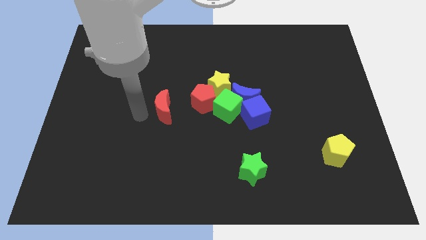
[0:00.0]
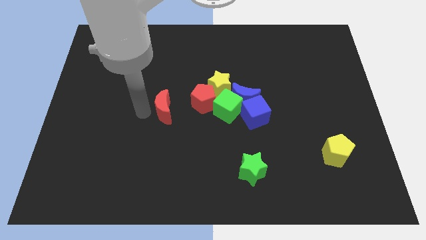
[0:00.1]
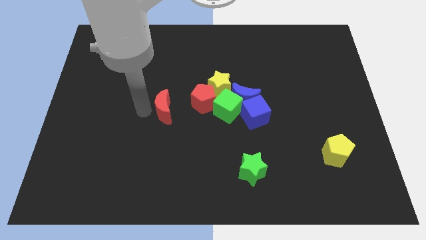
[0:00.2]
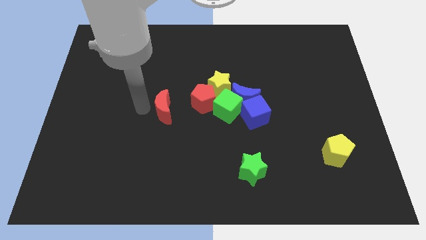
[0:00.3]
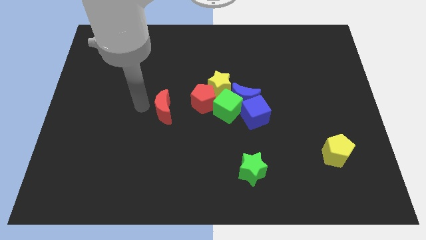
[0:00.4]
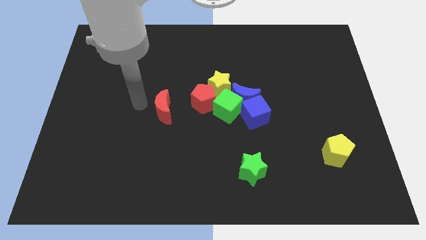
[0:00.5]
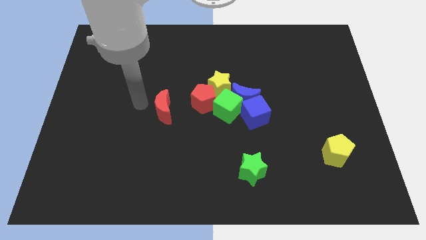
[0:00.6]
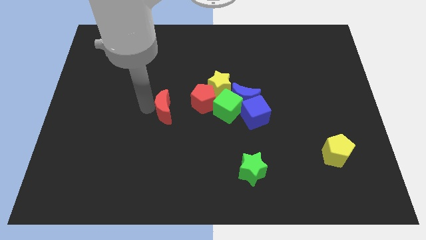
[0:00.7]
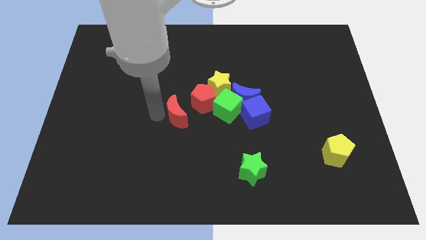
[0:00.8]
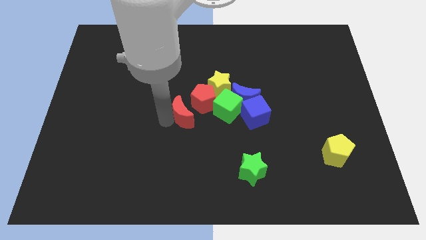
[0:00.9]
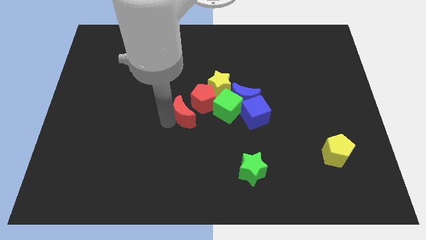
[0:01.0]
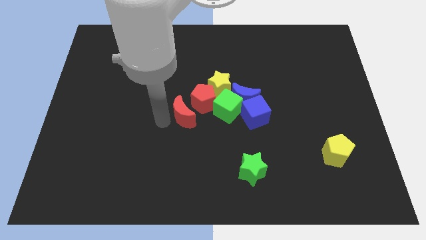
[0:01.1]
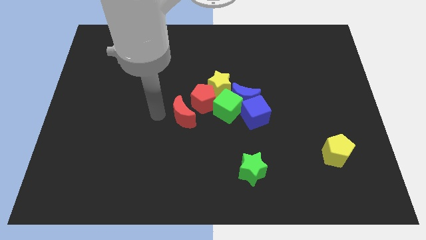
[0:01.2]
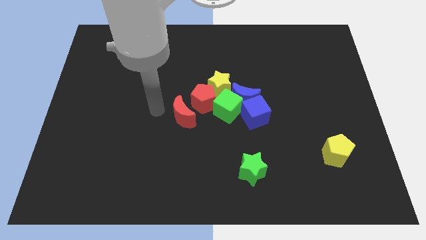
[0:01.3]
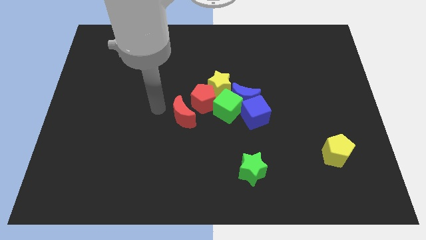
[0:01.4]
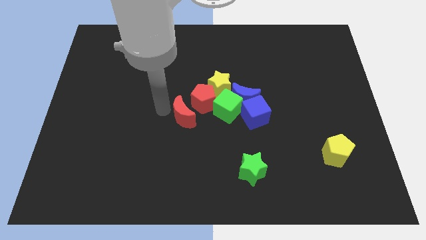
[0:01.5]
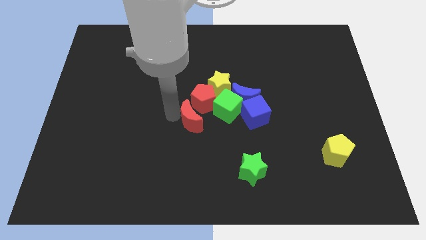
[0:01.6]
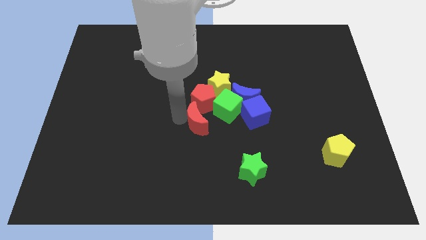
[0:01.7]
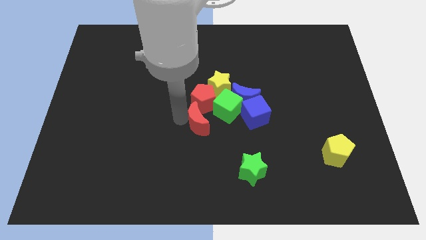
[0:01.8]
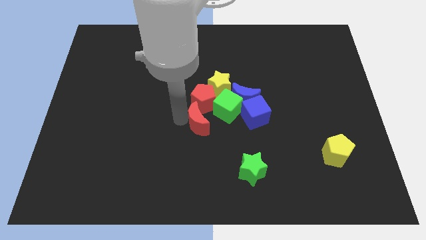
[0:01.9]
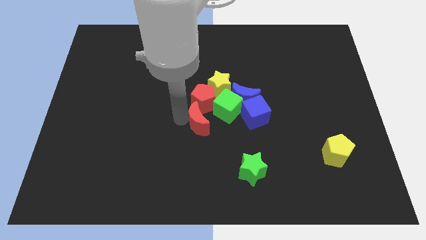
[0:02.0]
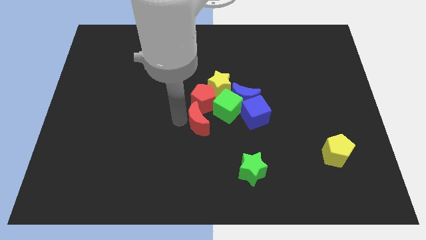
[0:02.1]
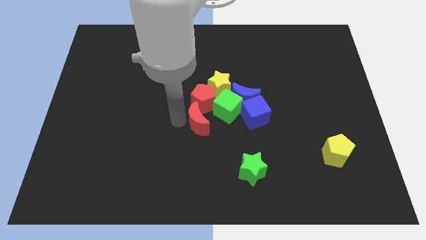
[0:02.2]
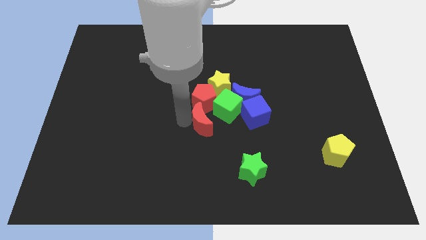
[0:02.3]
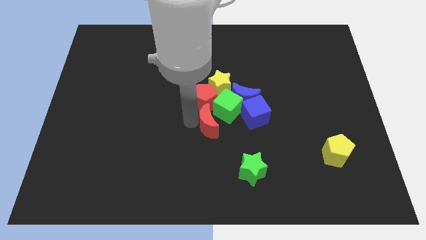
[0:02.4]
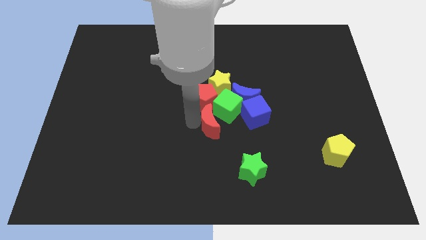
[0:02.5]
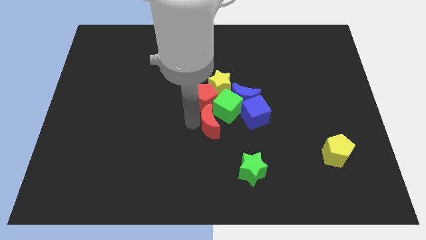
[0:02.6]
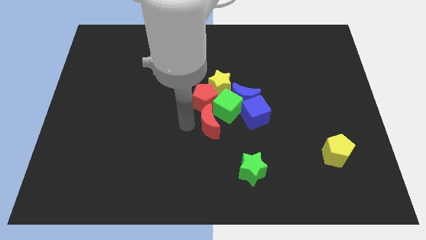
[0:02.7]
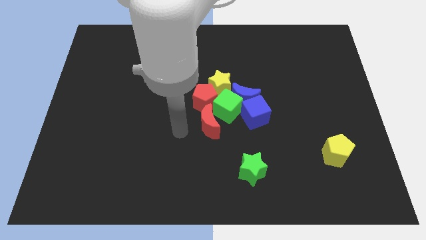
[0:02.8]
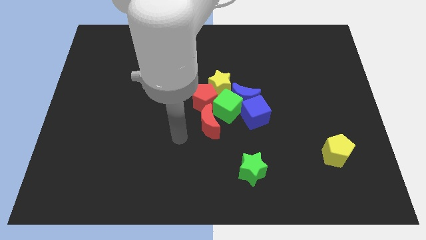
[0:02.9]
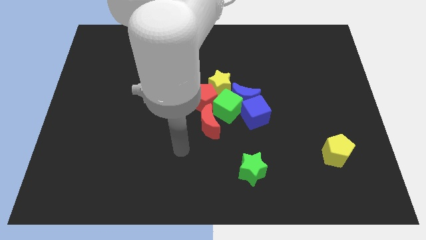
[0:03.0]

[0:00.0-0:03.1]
move the red crescent below to the green cube

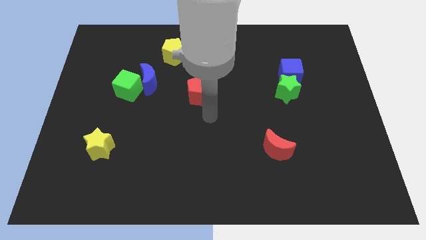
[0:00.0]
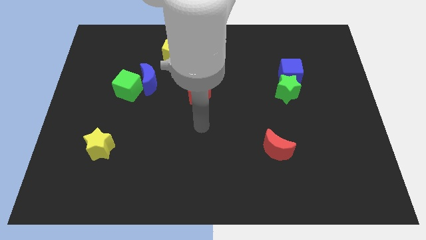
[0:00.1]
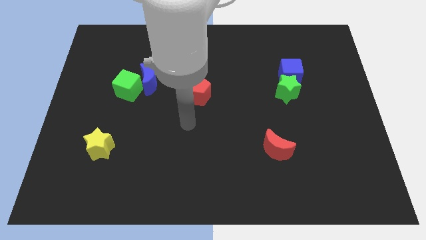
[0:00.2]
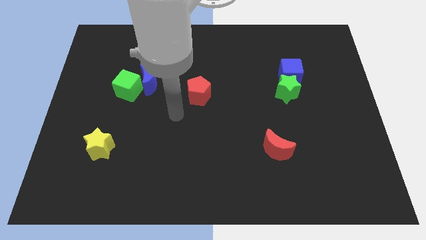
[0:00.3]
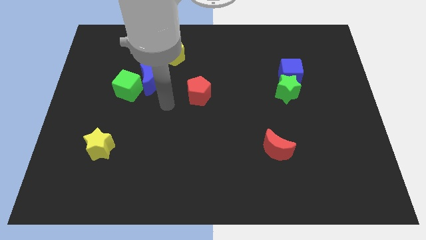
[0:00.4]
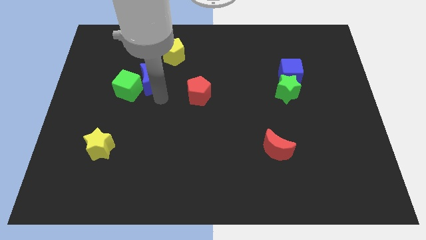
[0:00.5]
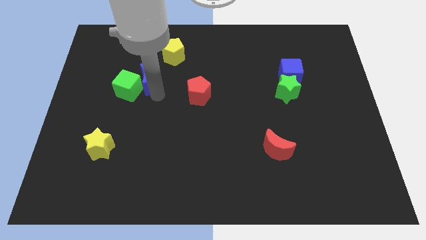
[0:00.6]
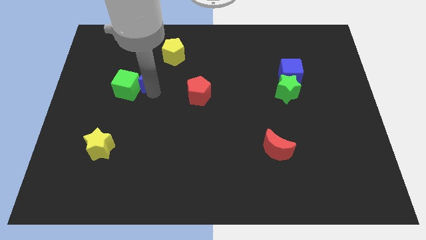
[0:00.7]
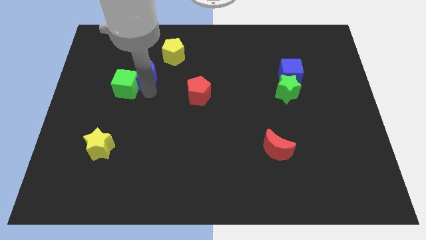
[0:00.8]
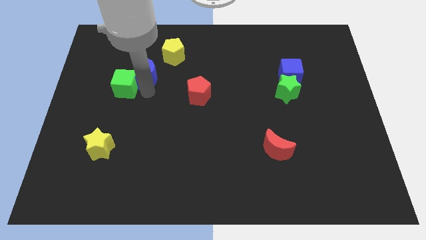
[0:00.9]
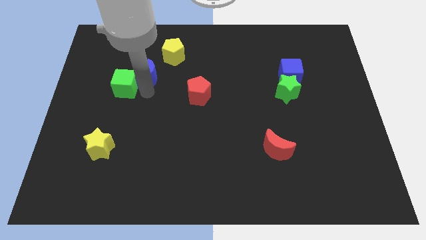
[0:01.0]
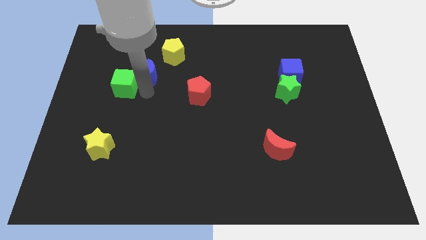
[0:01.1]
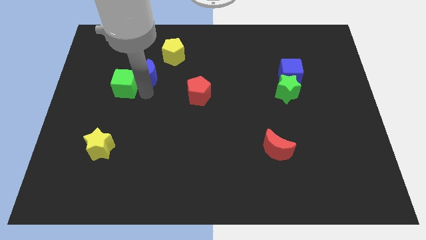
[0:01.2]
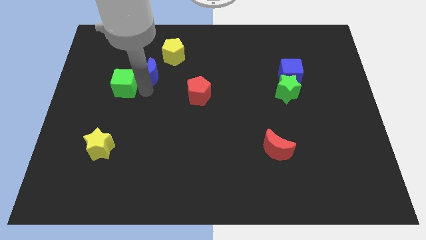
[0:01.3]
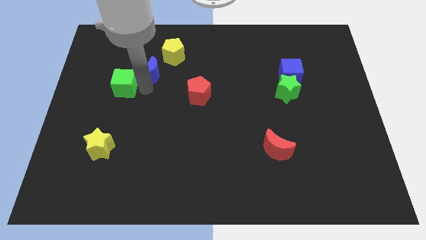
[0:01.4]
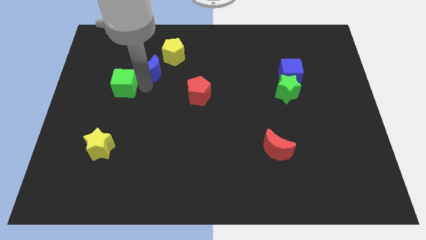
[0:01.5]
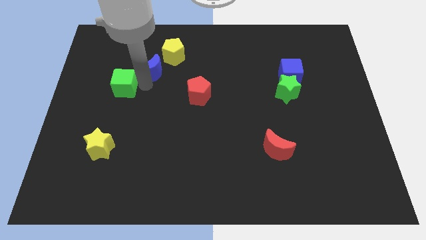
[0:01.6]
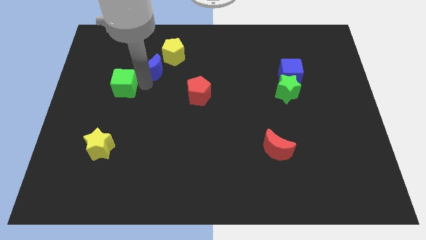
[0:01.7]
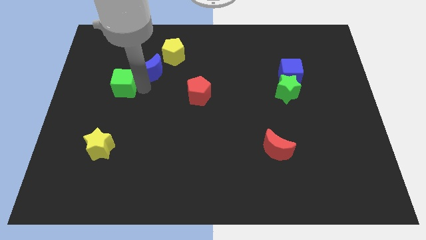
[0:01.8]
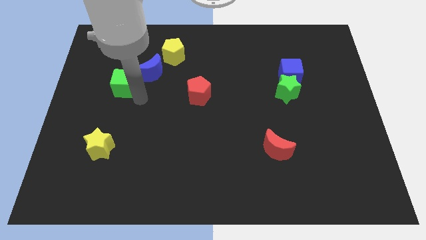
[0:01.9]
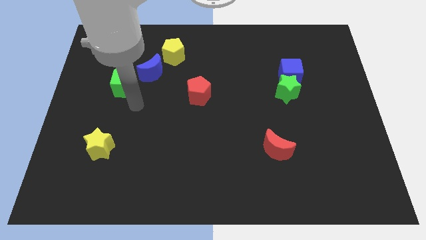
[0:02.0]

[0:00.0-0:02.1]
move the blue moon slightly up

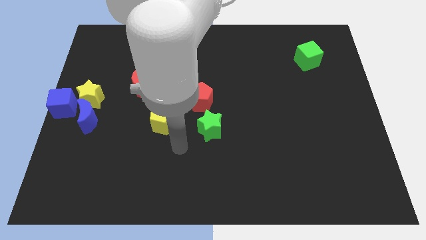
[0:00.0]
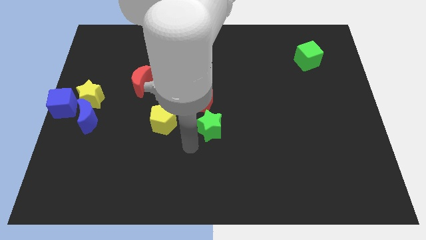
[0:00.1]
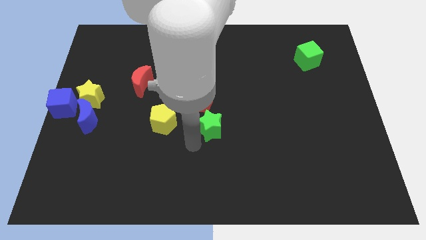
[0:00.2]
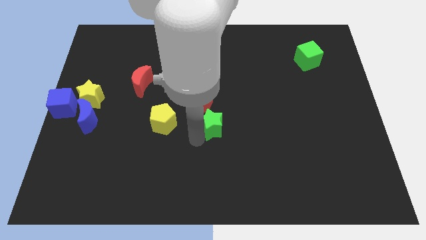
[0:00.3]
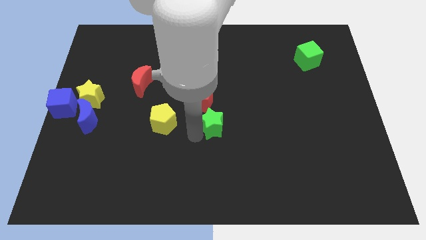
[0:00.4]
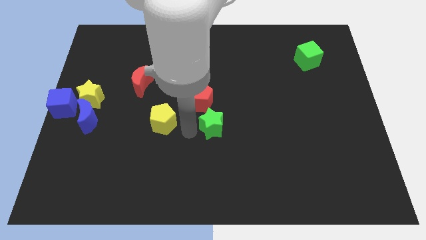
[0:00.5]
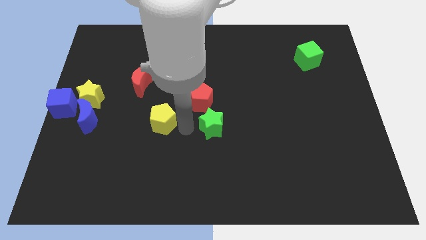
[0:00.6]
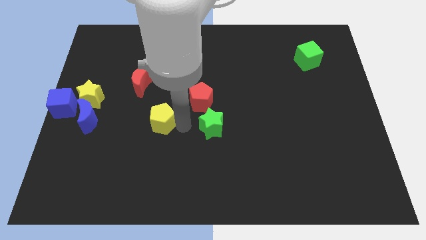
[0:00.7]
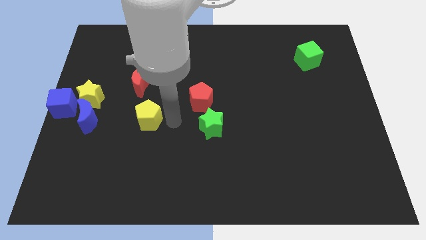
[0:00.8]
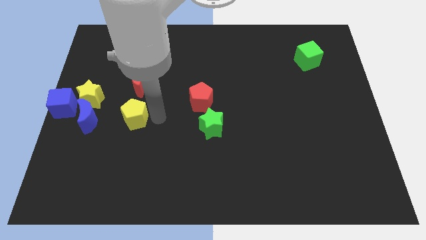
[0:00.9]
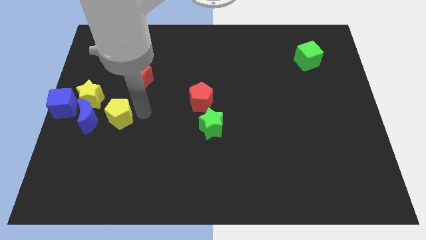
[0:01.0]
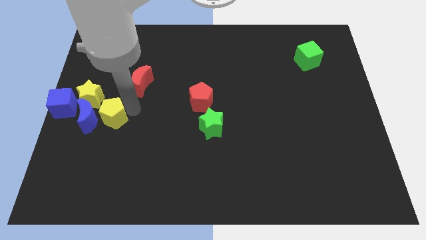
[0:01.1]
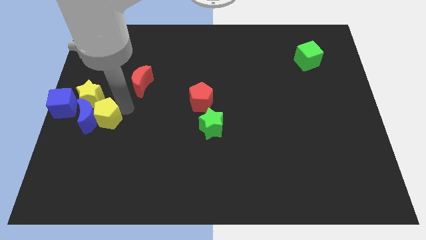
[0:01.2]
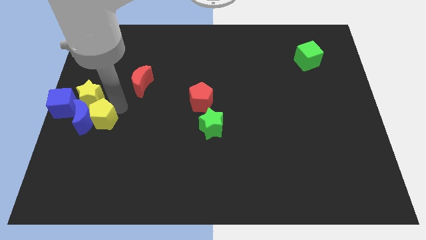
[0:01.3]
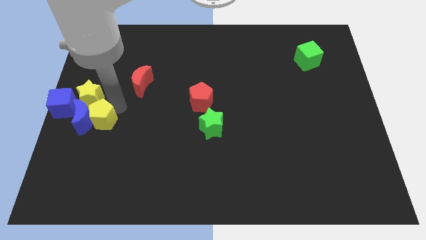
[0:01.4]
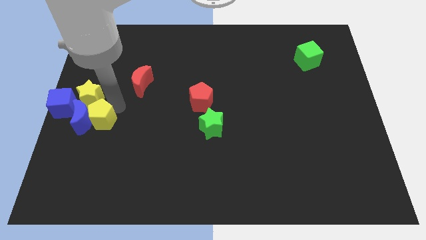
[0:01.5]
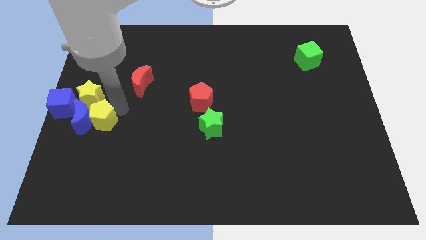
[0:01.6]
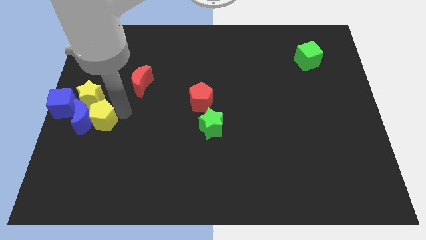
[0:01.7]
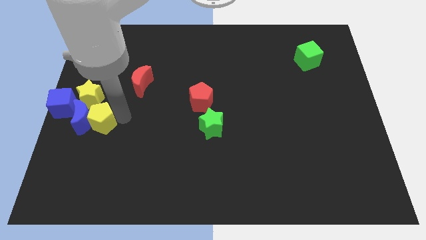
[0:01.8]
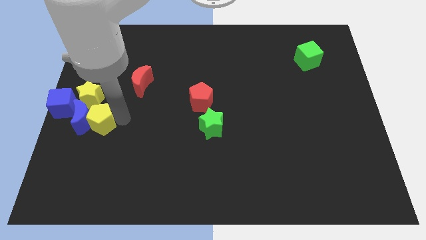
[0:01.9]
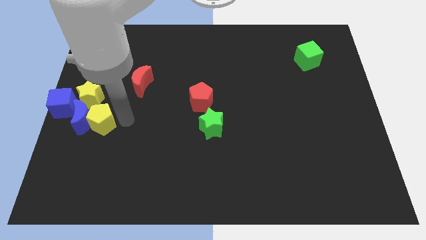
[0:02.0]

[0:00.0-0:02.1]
add yellow pentagon to the right of blue moon

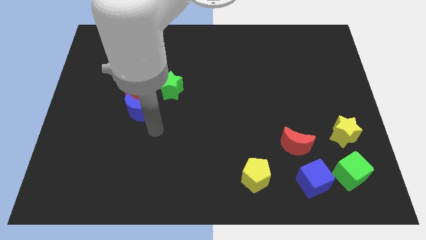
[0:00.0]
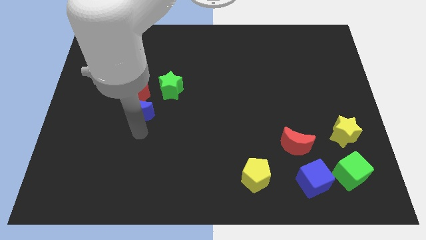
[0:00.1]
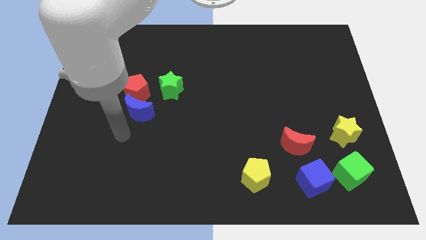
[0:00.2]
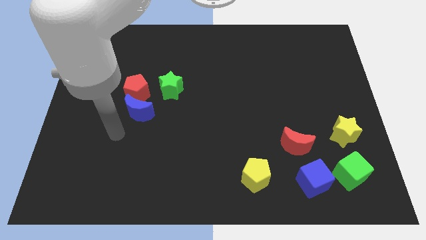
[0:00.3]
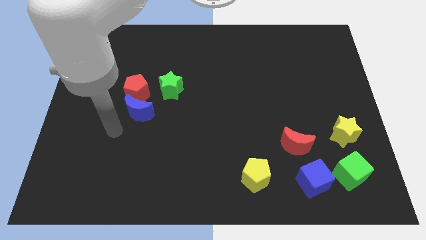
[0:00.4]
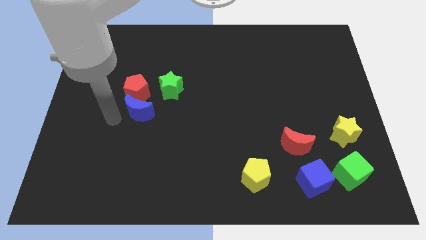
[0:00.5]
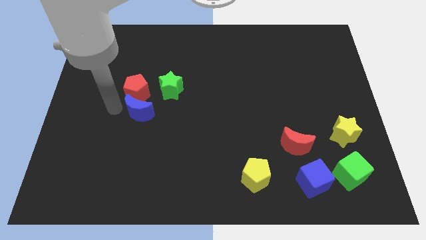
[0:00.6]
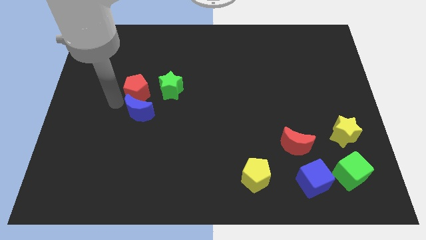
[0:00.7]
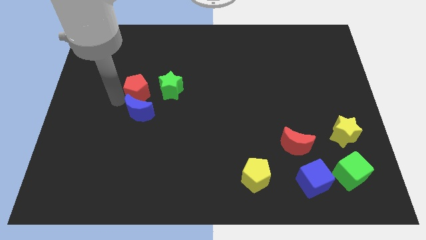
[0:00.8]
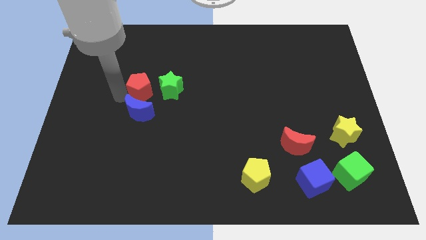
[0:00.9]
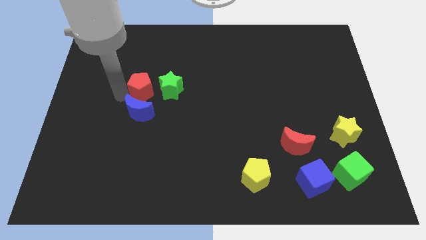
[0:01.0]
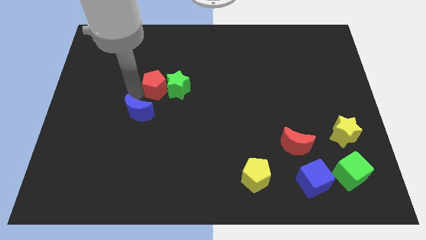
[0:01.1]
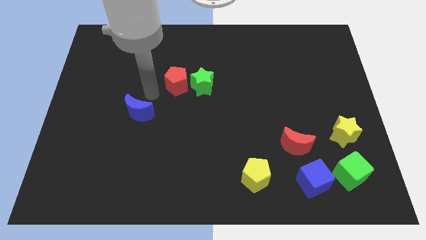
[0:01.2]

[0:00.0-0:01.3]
push the red pentagon into the green star

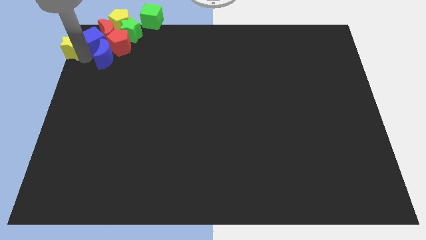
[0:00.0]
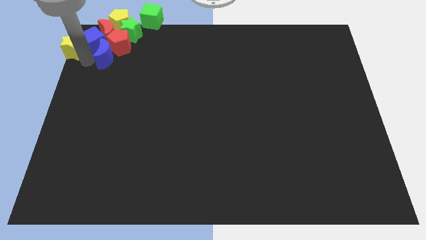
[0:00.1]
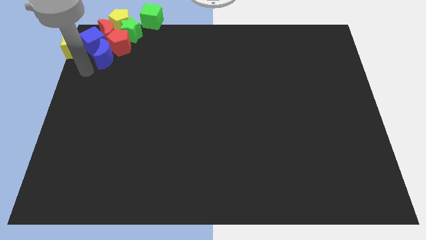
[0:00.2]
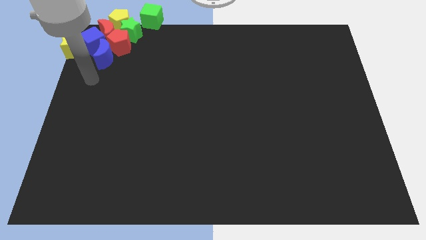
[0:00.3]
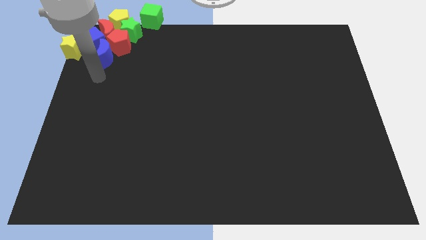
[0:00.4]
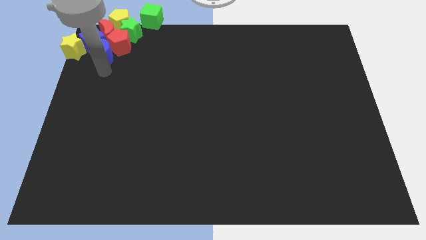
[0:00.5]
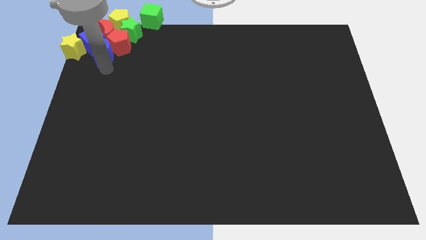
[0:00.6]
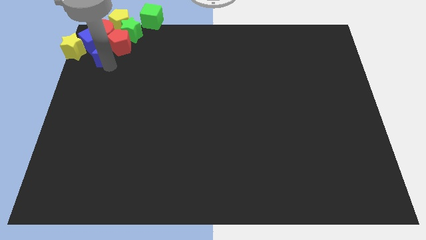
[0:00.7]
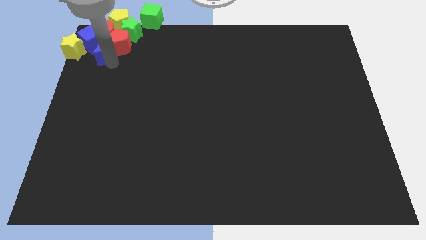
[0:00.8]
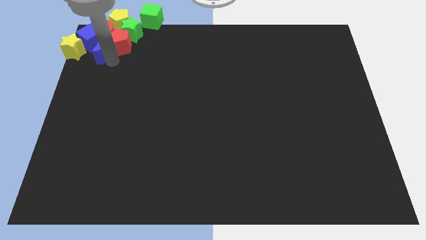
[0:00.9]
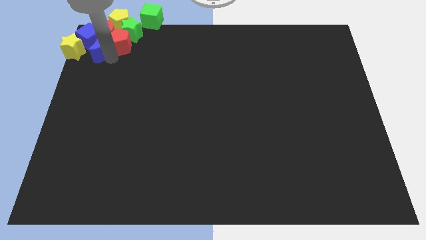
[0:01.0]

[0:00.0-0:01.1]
push the blue crescent slightly to the top
